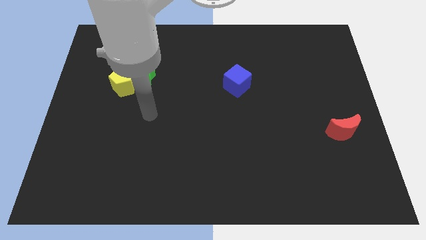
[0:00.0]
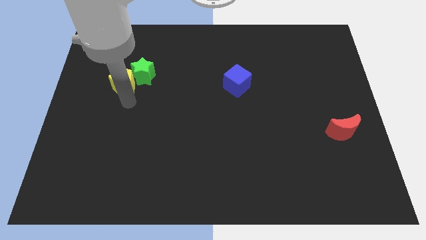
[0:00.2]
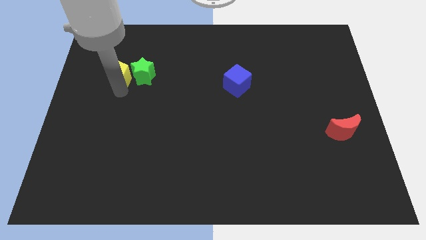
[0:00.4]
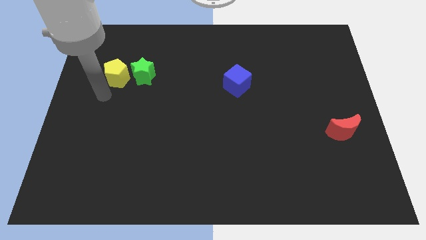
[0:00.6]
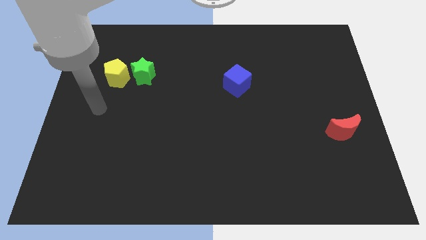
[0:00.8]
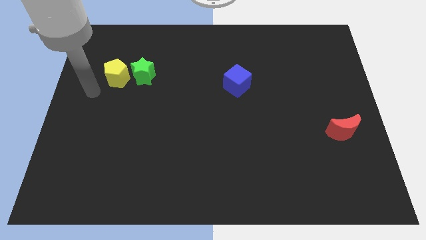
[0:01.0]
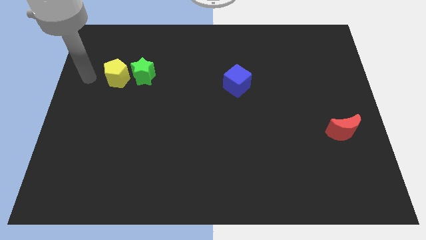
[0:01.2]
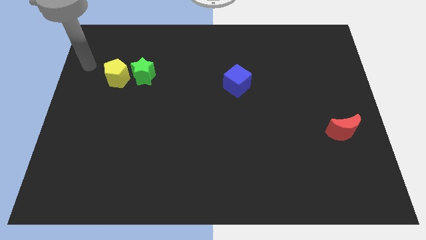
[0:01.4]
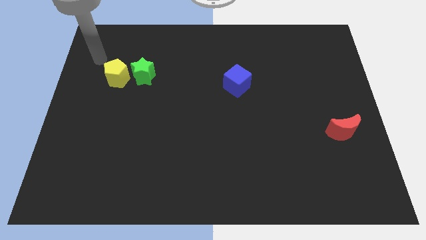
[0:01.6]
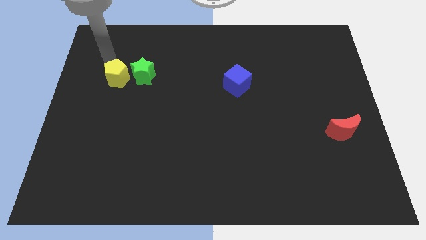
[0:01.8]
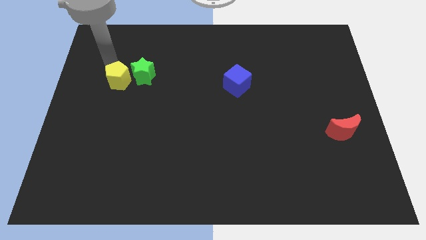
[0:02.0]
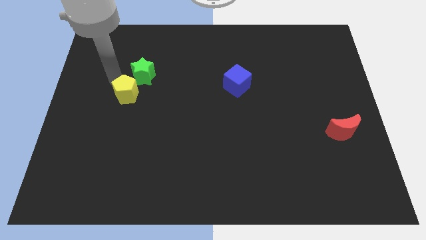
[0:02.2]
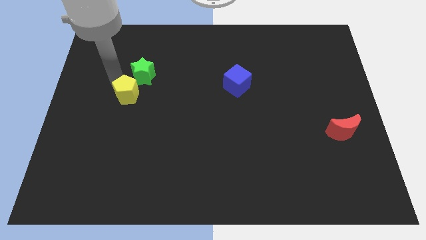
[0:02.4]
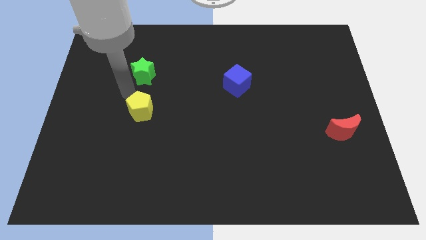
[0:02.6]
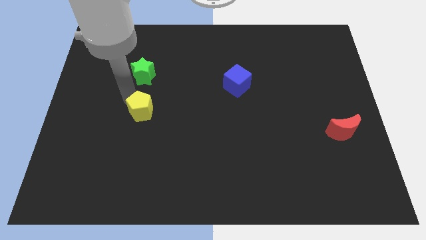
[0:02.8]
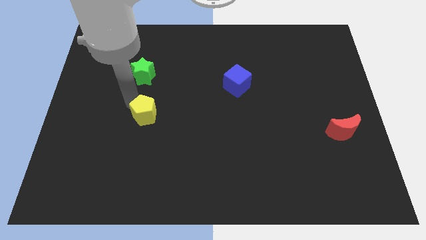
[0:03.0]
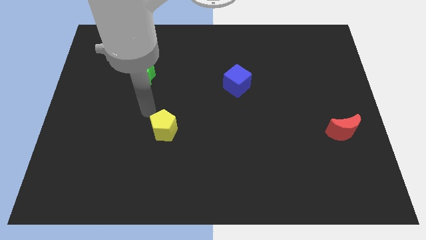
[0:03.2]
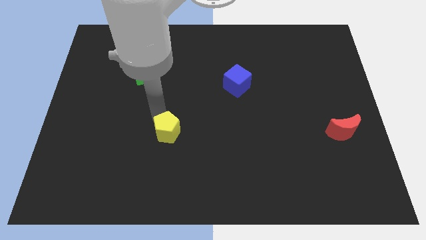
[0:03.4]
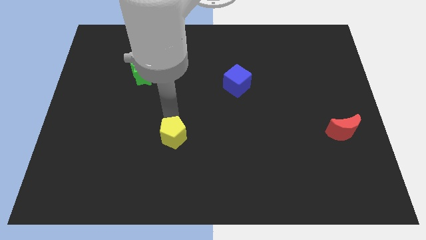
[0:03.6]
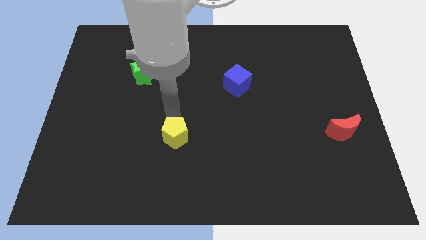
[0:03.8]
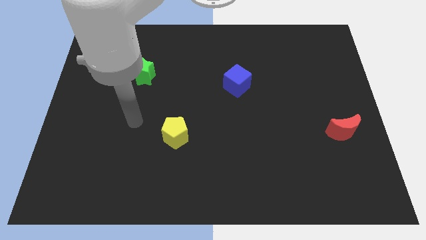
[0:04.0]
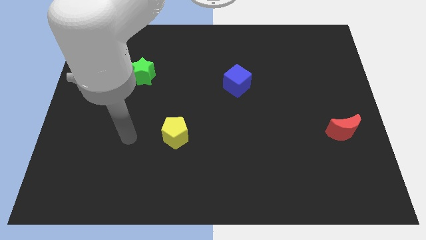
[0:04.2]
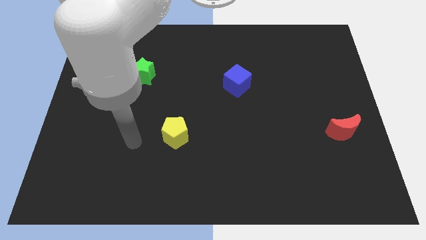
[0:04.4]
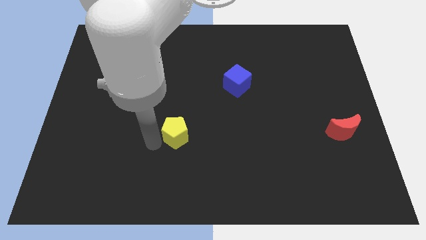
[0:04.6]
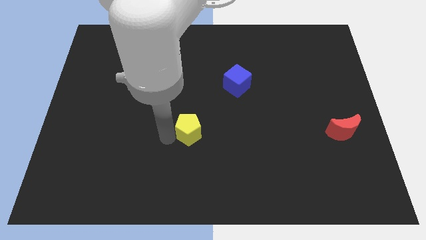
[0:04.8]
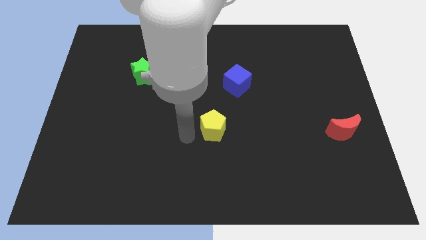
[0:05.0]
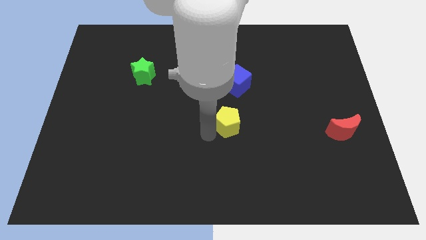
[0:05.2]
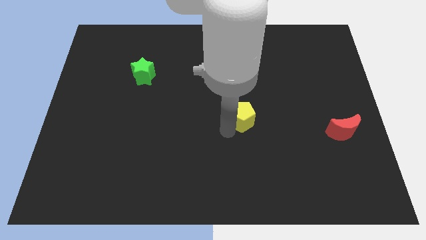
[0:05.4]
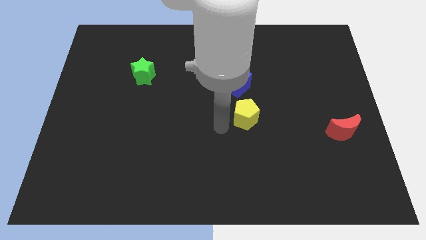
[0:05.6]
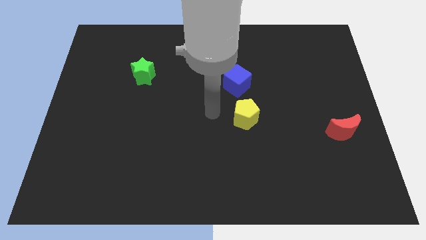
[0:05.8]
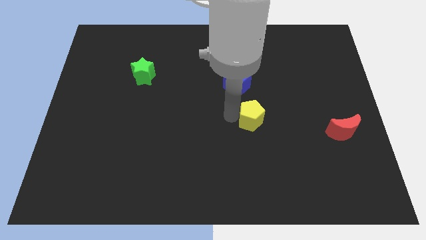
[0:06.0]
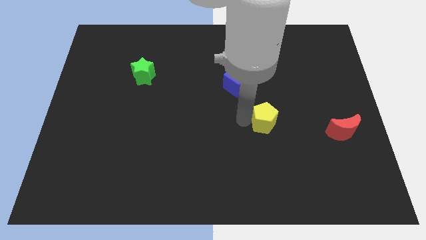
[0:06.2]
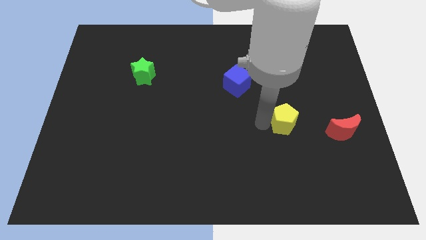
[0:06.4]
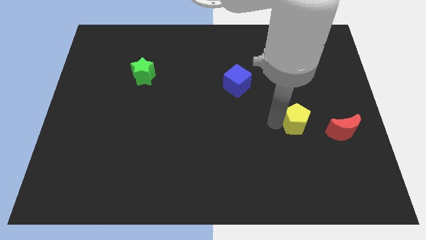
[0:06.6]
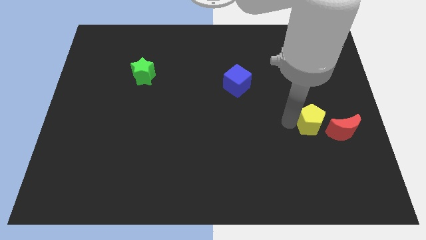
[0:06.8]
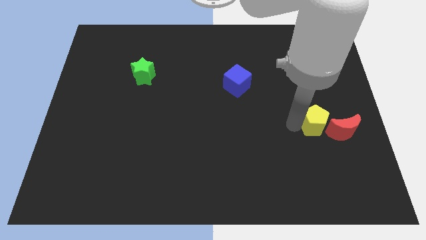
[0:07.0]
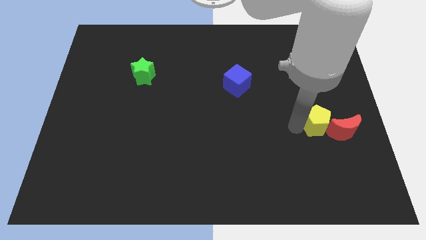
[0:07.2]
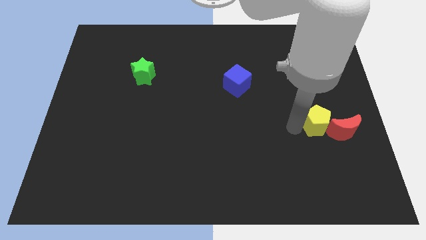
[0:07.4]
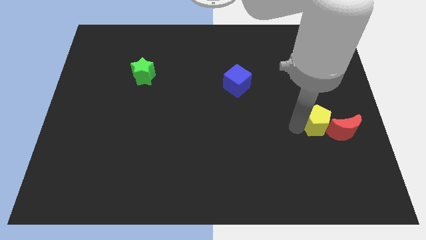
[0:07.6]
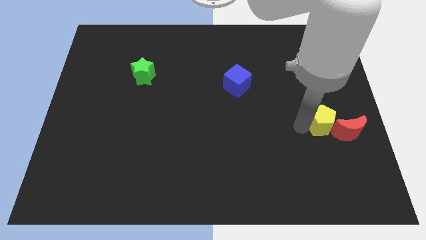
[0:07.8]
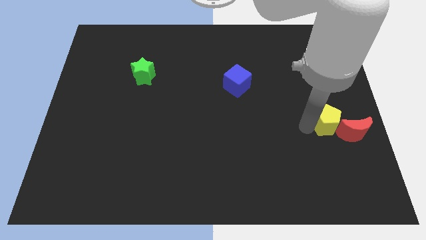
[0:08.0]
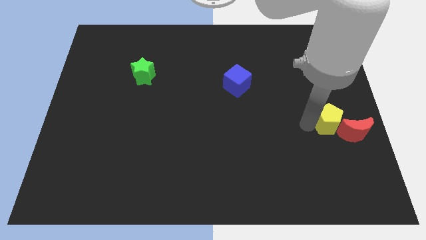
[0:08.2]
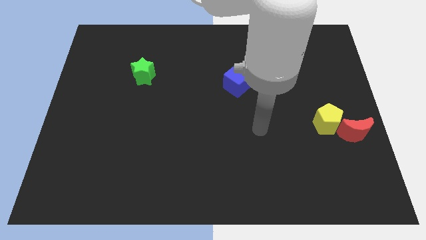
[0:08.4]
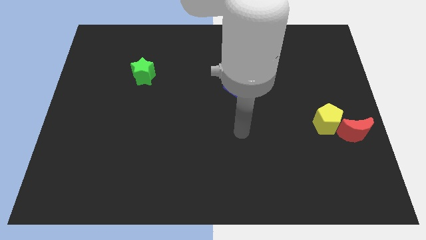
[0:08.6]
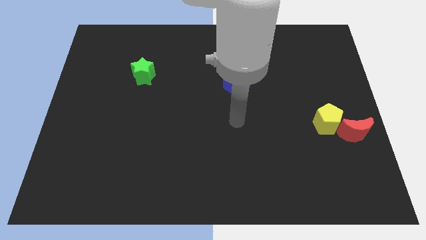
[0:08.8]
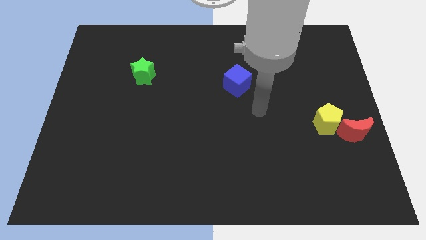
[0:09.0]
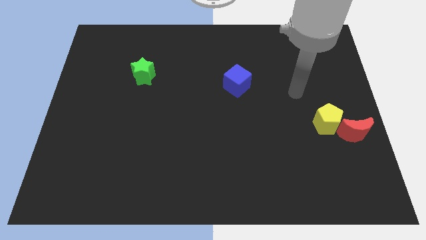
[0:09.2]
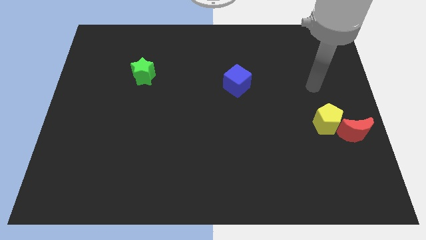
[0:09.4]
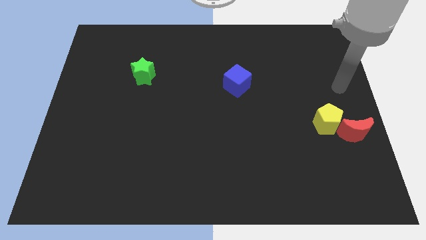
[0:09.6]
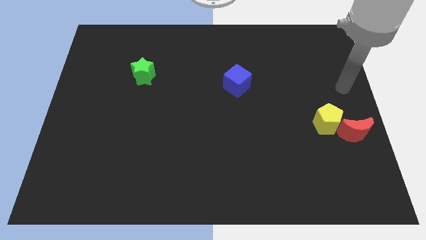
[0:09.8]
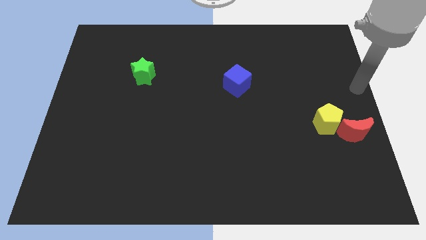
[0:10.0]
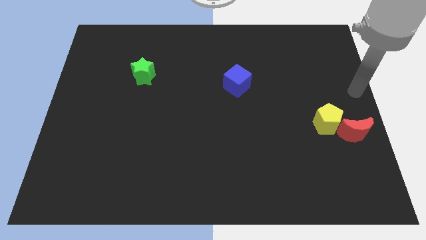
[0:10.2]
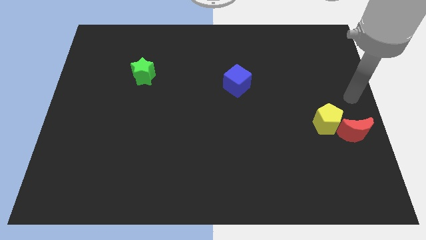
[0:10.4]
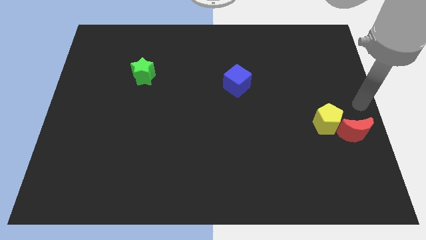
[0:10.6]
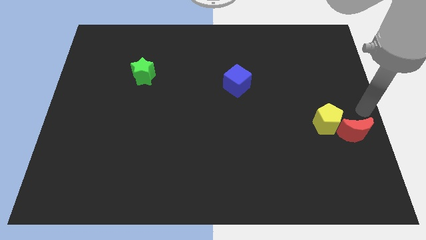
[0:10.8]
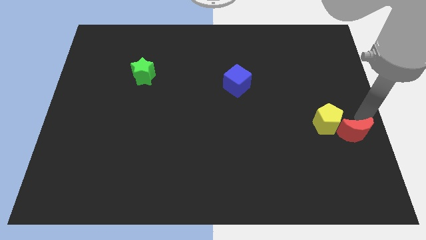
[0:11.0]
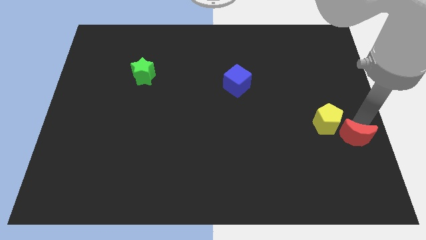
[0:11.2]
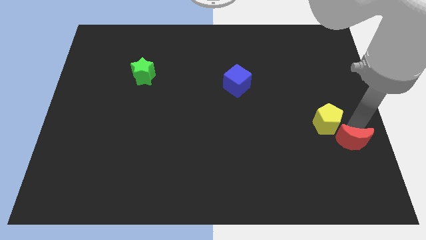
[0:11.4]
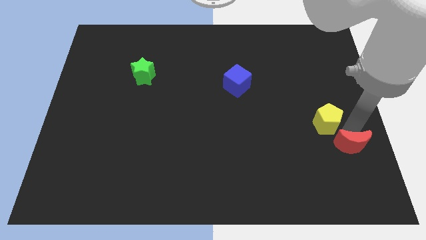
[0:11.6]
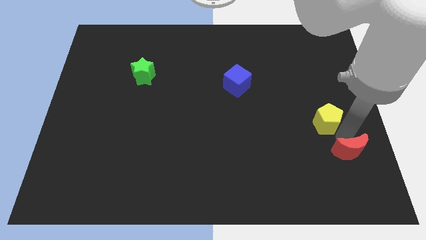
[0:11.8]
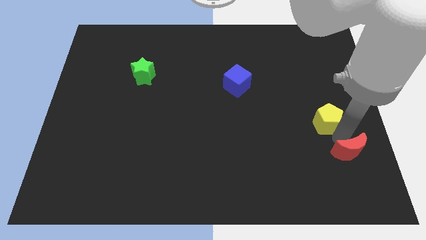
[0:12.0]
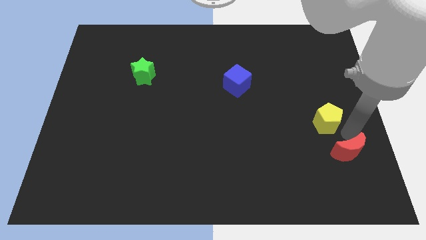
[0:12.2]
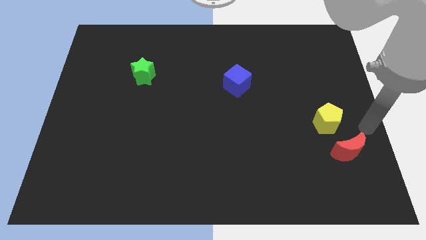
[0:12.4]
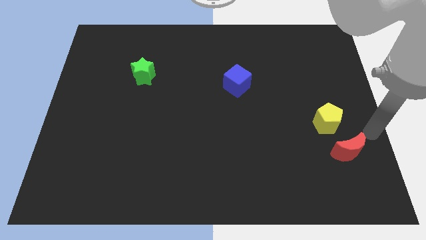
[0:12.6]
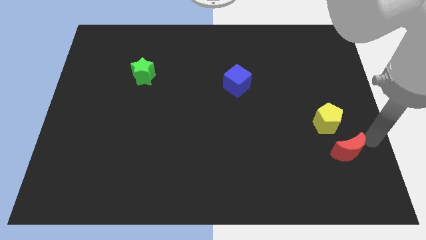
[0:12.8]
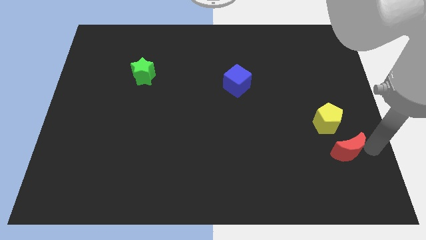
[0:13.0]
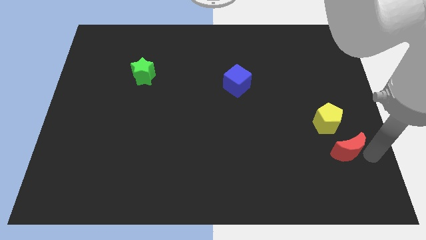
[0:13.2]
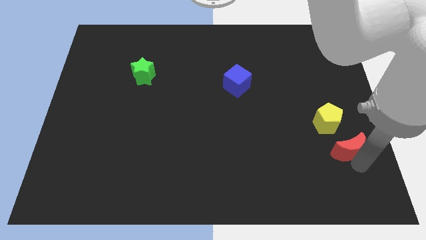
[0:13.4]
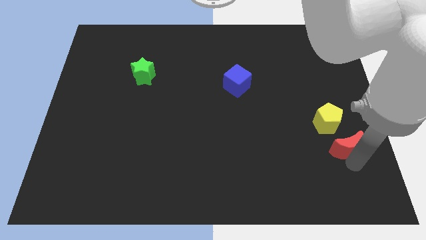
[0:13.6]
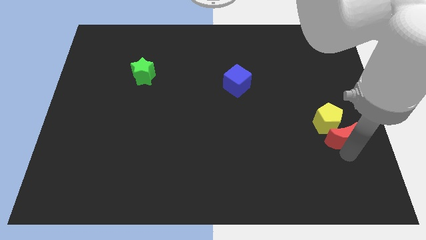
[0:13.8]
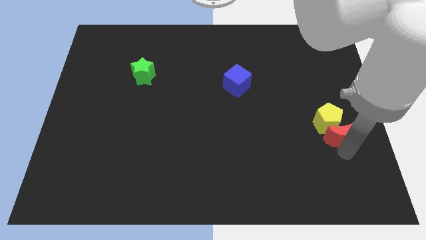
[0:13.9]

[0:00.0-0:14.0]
push the yellow block to the moon

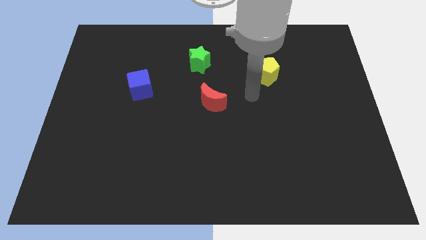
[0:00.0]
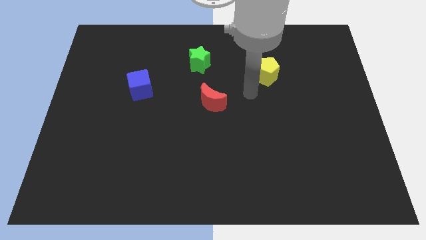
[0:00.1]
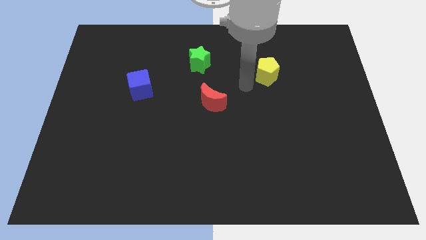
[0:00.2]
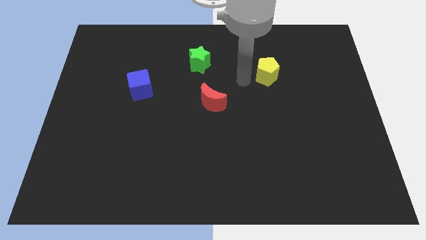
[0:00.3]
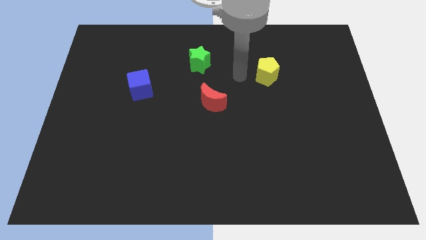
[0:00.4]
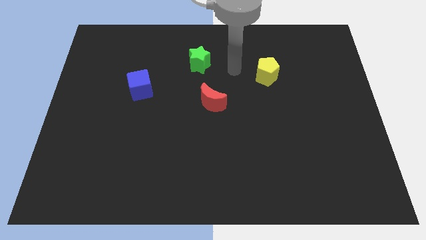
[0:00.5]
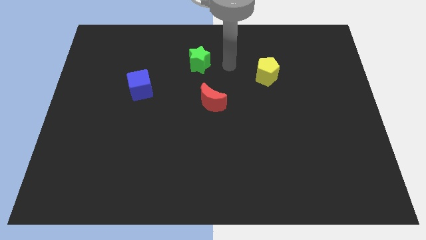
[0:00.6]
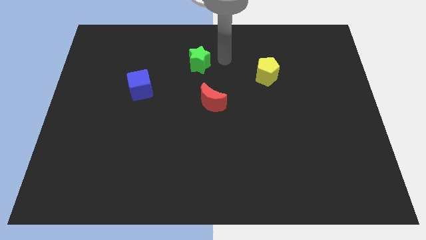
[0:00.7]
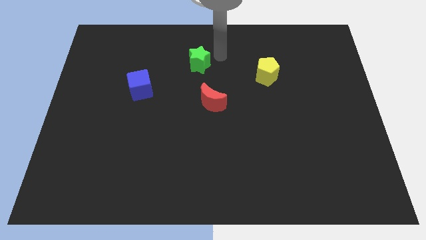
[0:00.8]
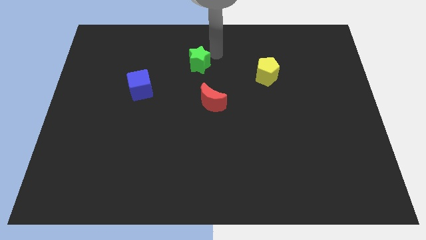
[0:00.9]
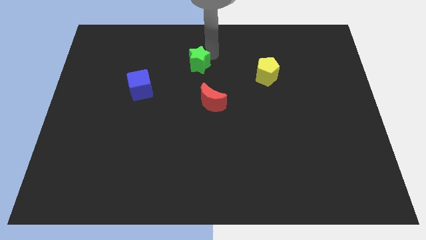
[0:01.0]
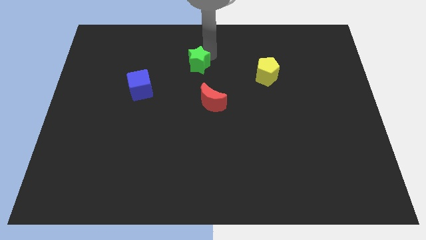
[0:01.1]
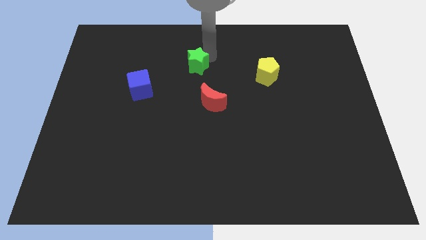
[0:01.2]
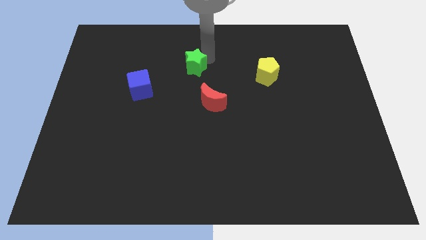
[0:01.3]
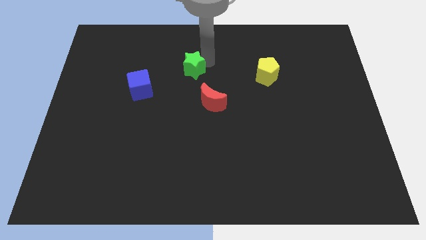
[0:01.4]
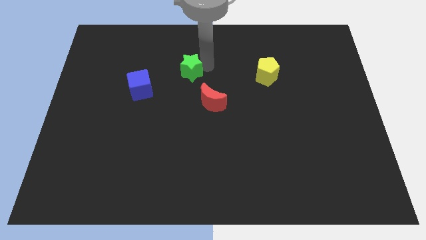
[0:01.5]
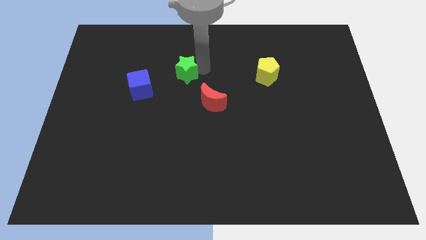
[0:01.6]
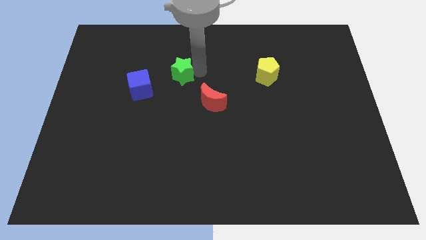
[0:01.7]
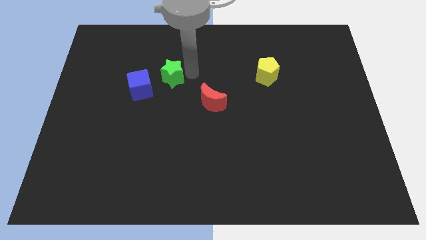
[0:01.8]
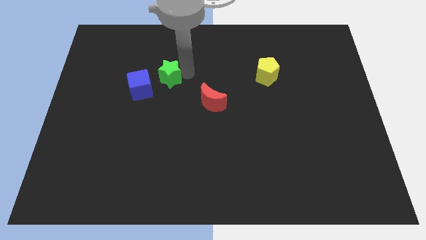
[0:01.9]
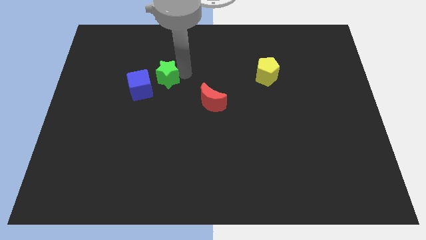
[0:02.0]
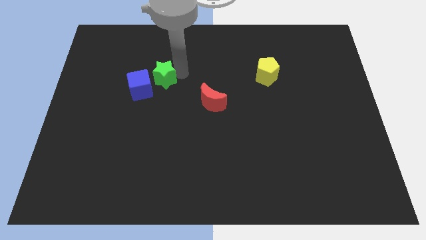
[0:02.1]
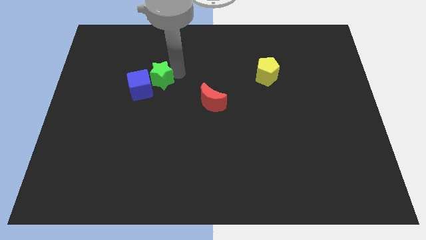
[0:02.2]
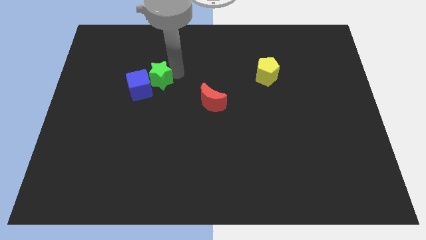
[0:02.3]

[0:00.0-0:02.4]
put the green block to the blue block
